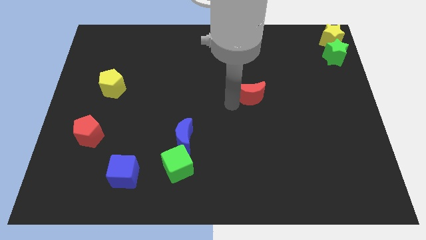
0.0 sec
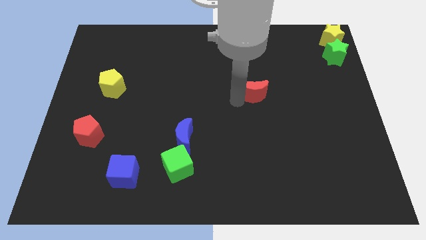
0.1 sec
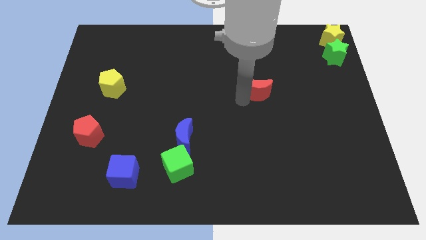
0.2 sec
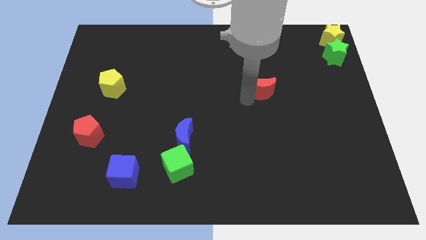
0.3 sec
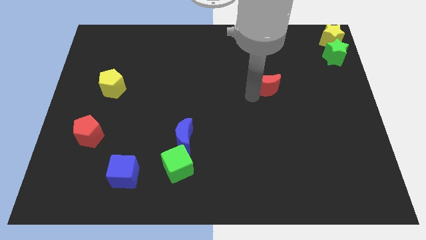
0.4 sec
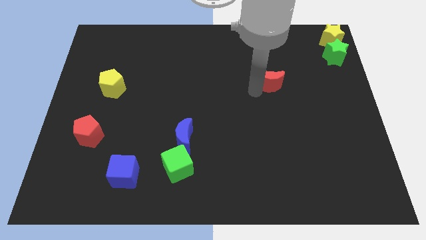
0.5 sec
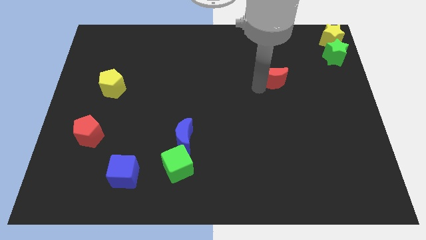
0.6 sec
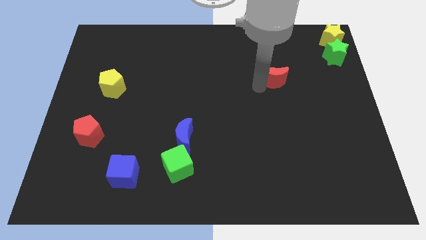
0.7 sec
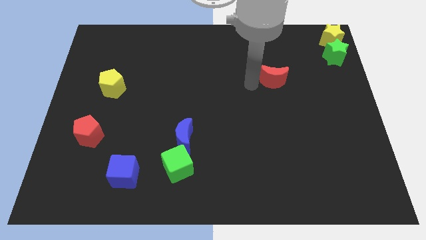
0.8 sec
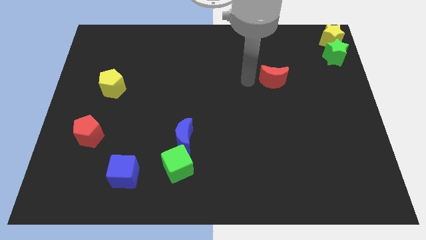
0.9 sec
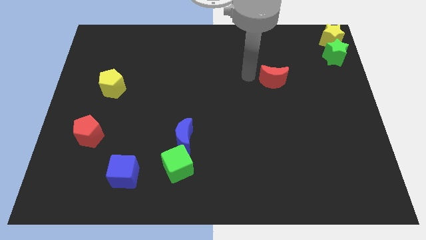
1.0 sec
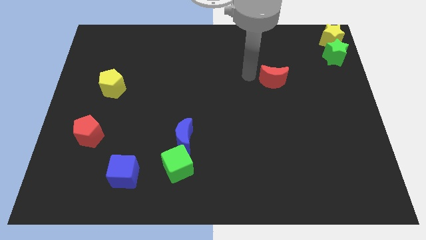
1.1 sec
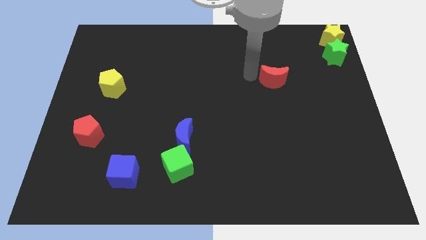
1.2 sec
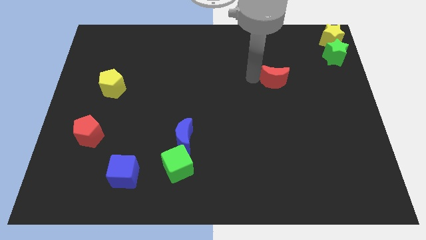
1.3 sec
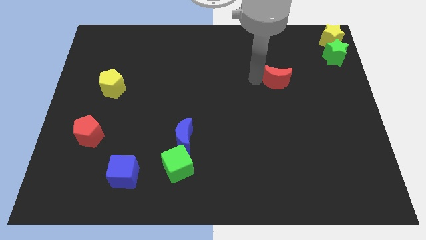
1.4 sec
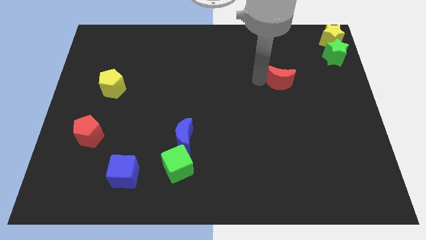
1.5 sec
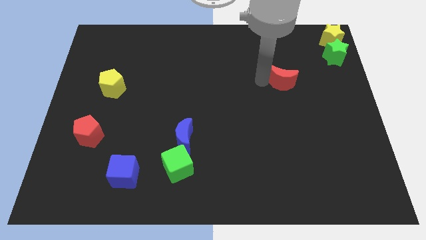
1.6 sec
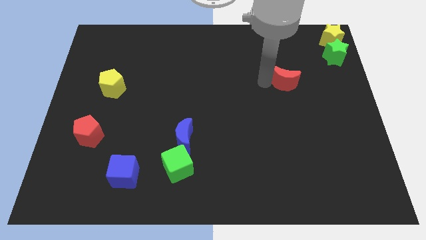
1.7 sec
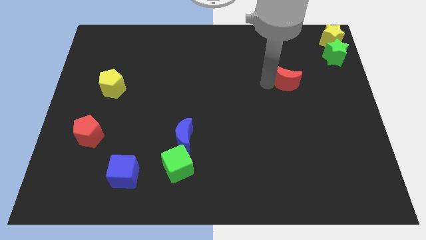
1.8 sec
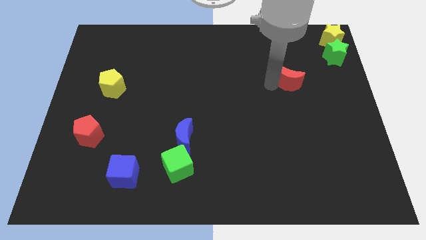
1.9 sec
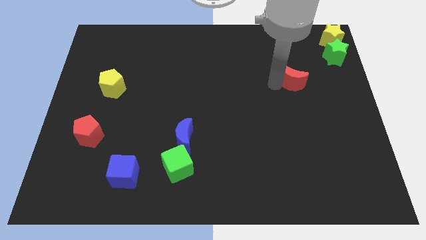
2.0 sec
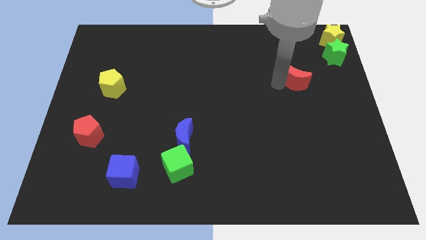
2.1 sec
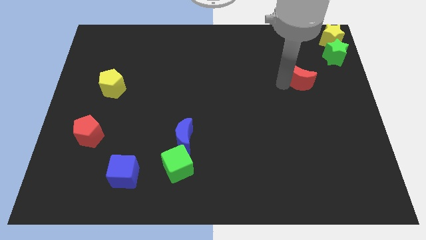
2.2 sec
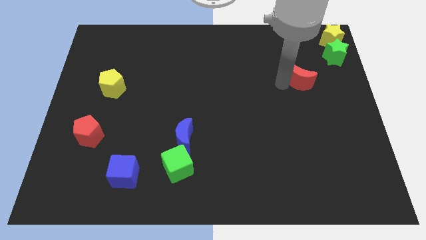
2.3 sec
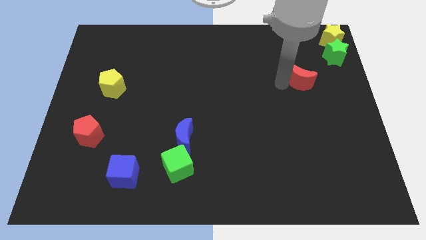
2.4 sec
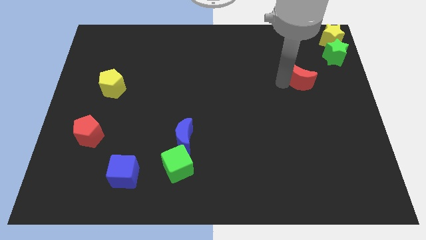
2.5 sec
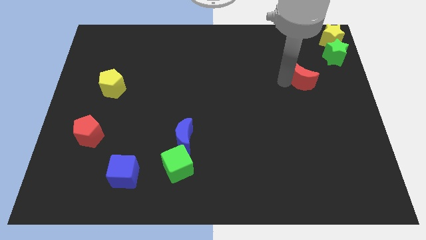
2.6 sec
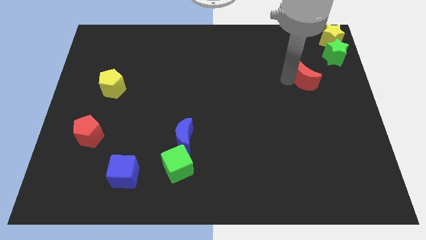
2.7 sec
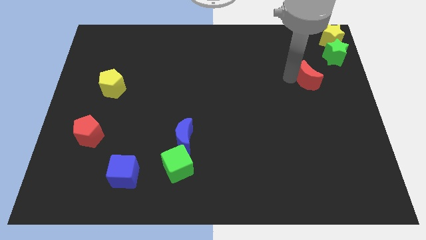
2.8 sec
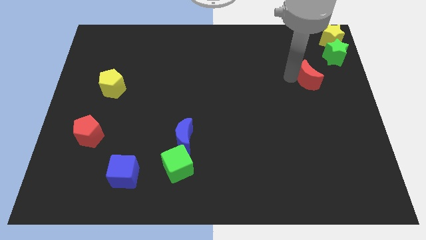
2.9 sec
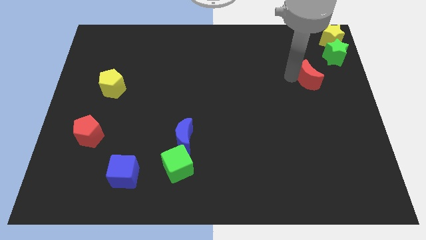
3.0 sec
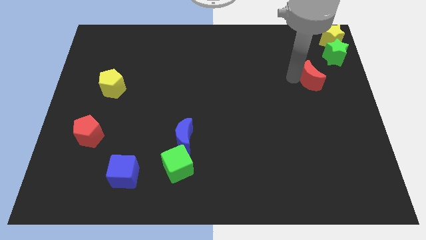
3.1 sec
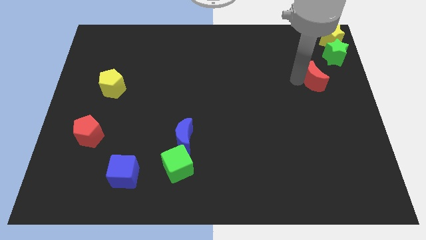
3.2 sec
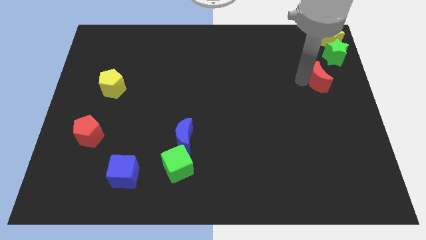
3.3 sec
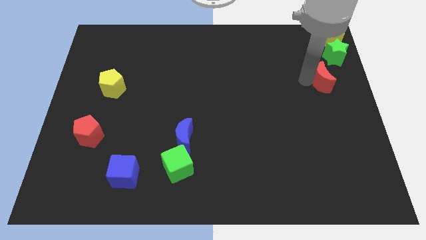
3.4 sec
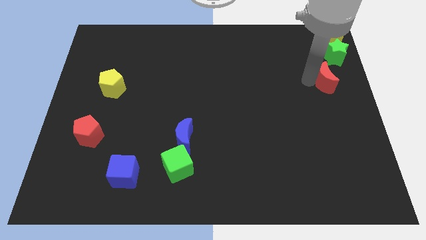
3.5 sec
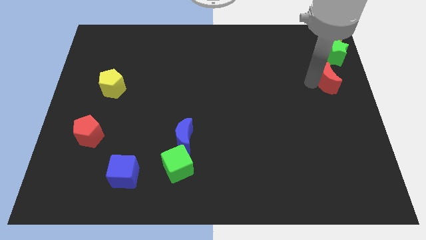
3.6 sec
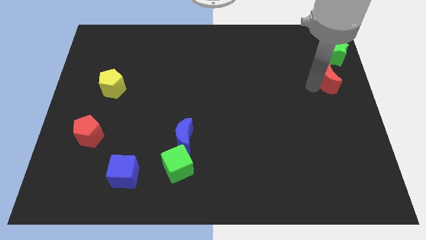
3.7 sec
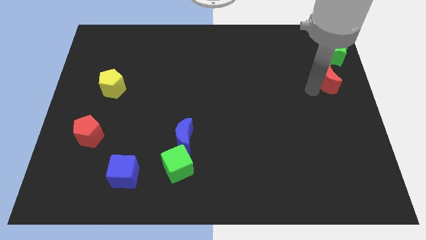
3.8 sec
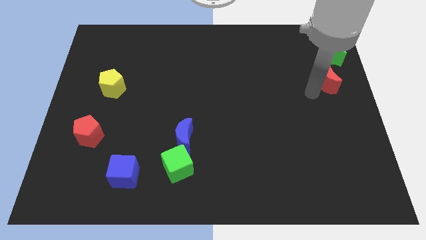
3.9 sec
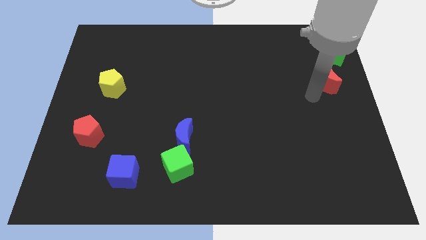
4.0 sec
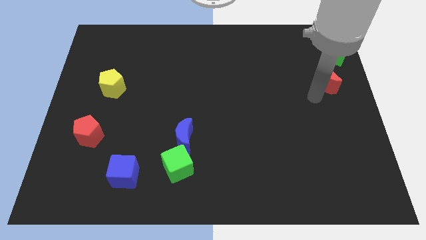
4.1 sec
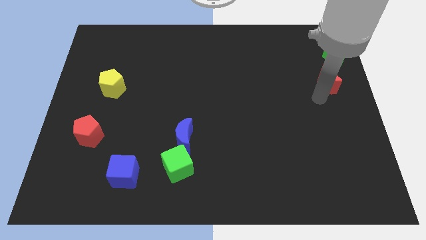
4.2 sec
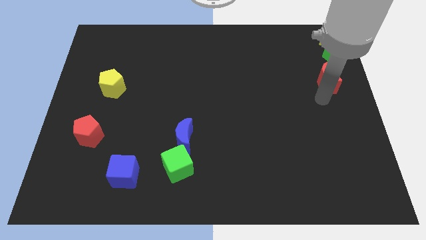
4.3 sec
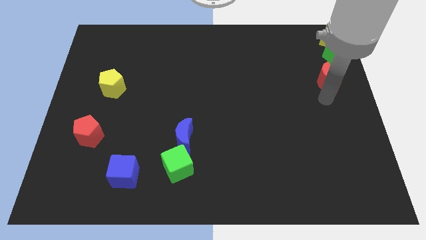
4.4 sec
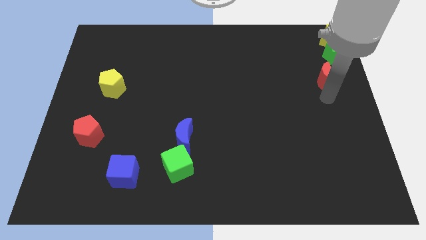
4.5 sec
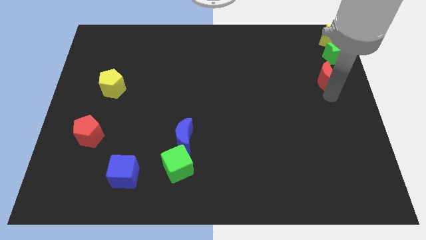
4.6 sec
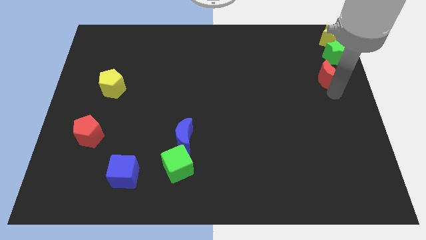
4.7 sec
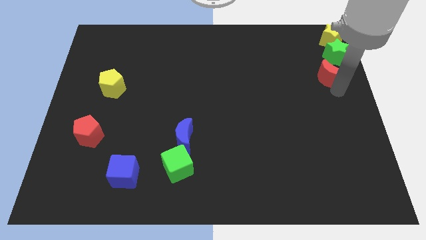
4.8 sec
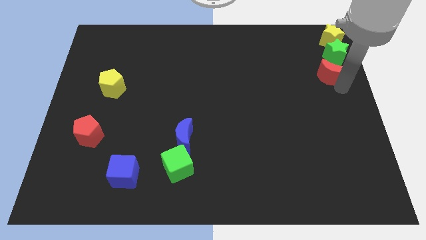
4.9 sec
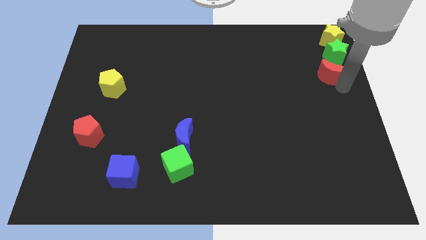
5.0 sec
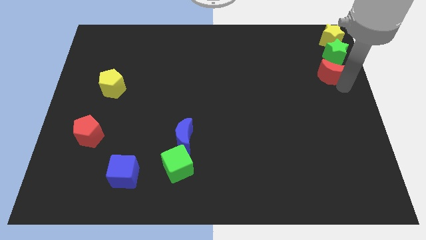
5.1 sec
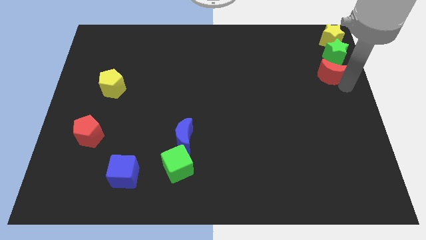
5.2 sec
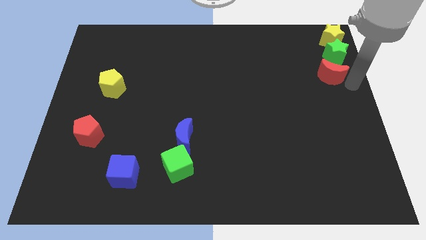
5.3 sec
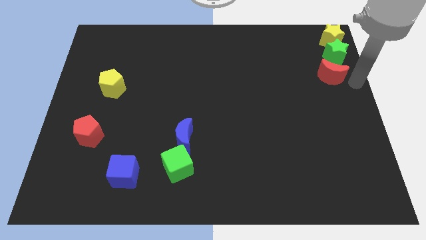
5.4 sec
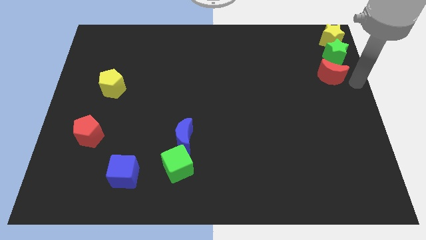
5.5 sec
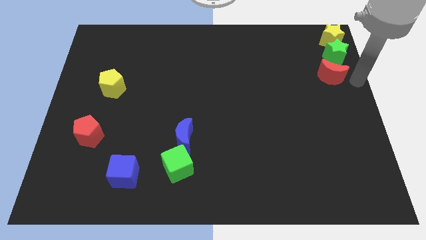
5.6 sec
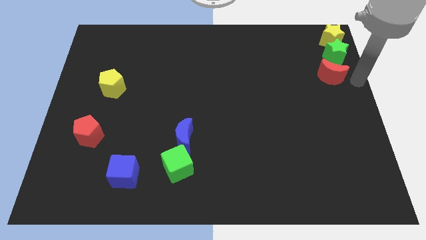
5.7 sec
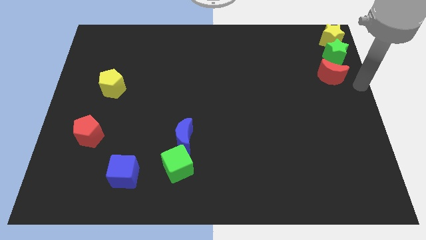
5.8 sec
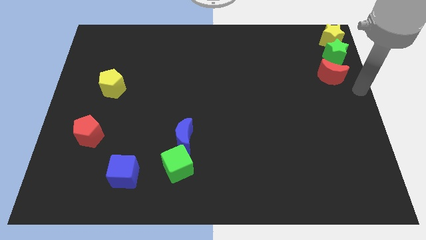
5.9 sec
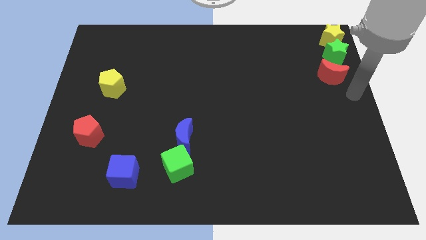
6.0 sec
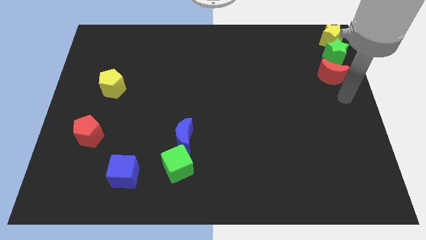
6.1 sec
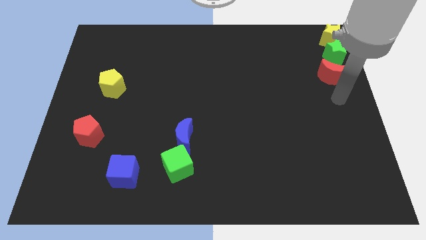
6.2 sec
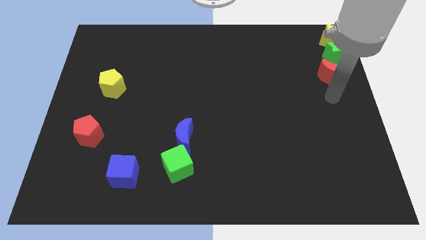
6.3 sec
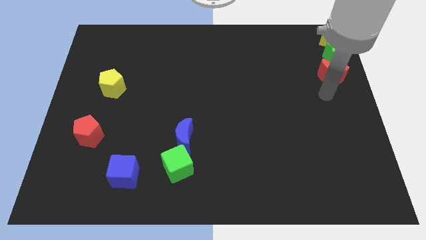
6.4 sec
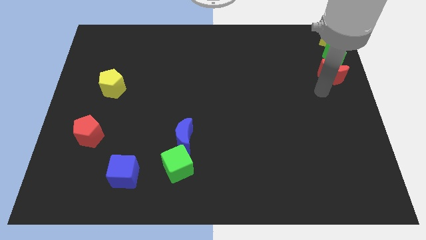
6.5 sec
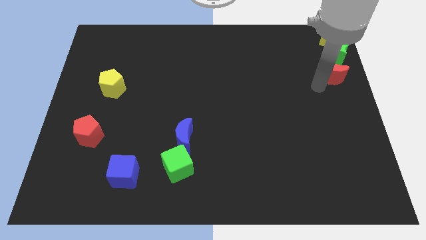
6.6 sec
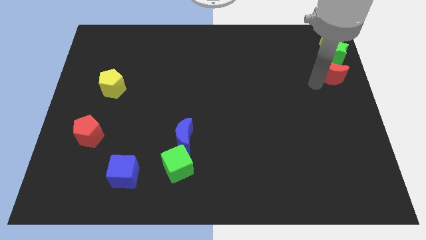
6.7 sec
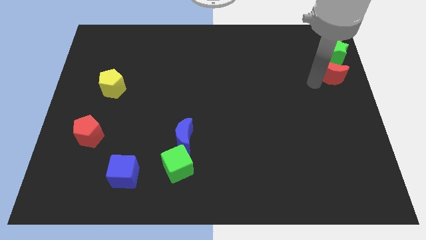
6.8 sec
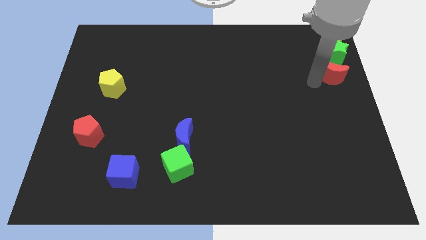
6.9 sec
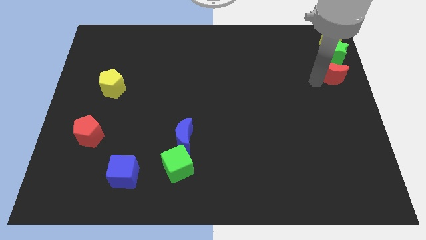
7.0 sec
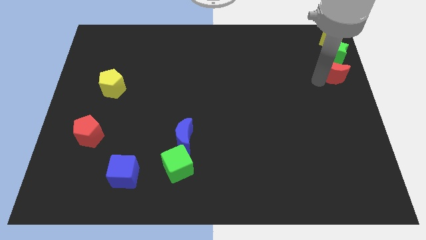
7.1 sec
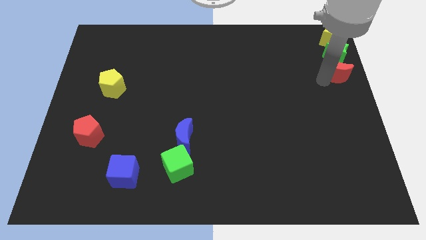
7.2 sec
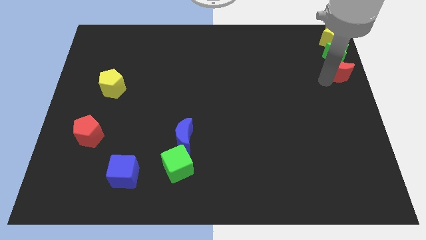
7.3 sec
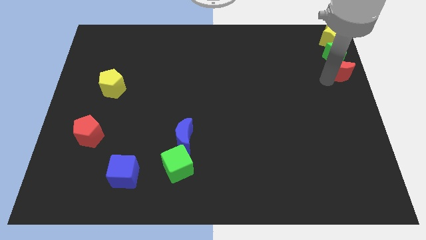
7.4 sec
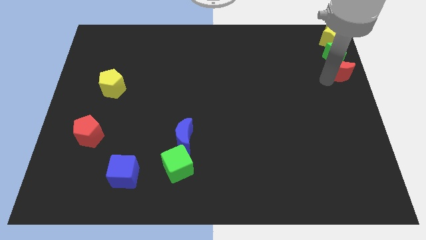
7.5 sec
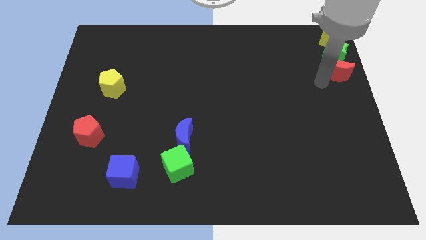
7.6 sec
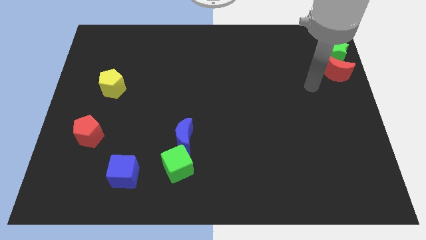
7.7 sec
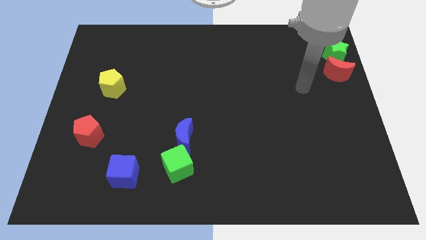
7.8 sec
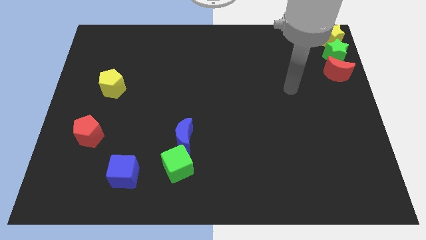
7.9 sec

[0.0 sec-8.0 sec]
move the red crescent below the green star

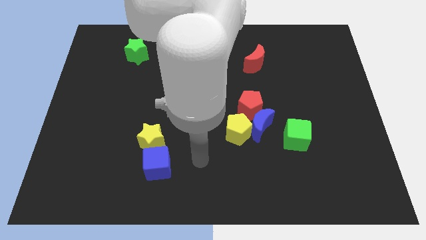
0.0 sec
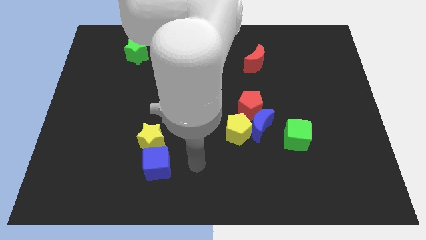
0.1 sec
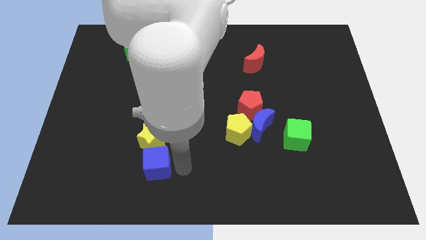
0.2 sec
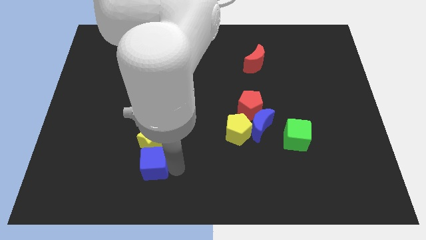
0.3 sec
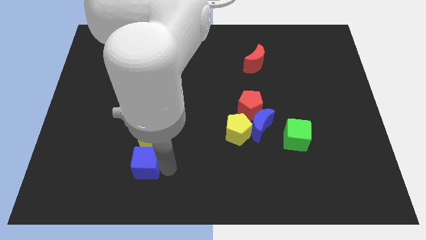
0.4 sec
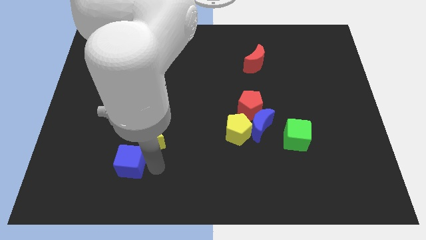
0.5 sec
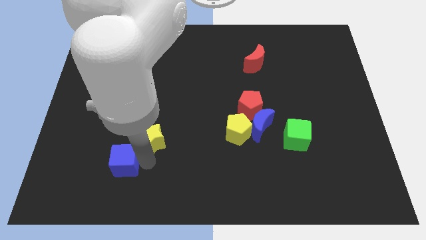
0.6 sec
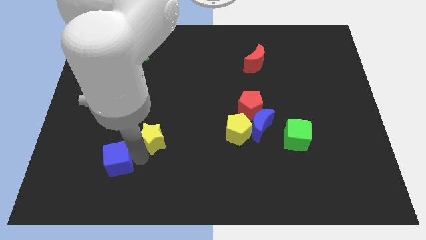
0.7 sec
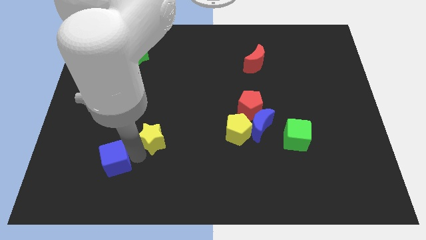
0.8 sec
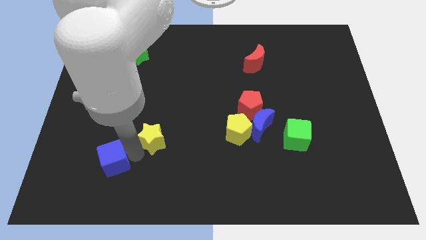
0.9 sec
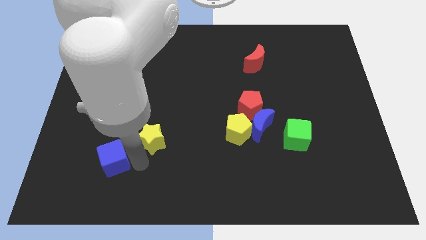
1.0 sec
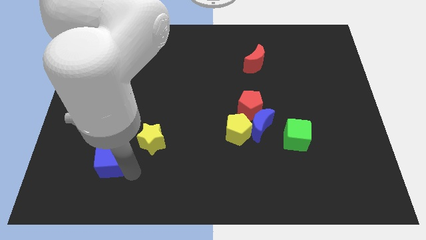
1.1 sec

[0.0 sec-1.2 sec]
separate the blue cube from the yellow star
